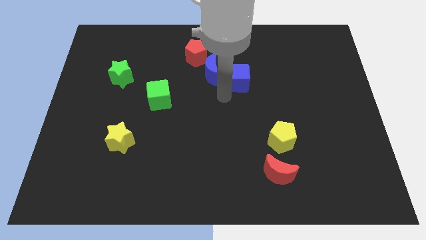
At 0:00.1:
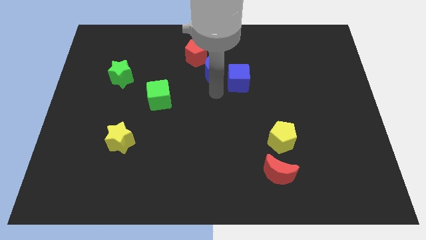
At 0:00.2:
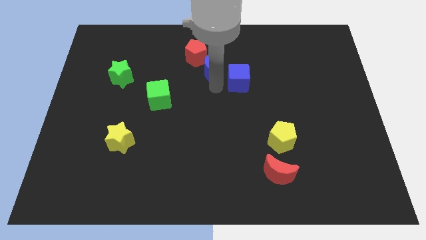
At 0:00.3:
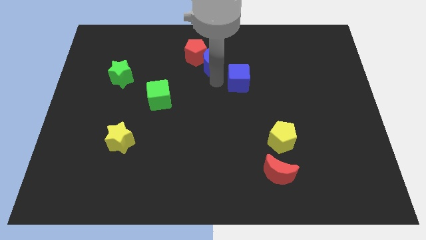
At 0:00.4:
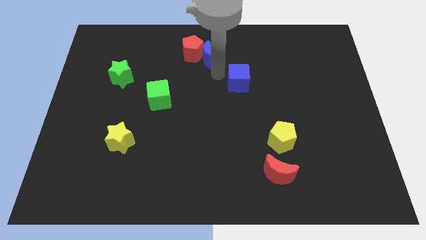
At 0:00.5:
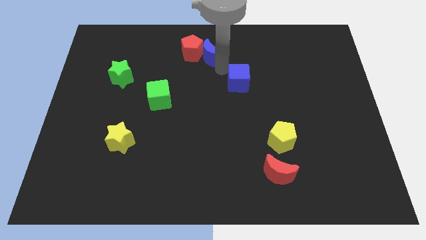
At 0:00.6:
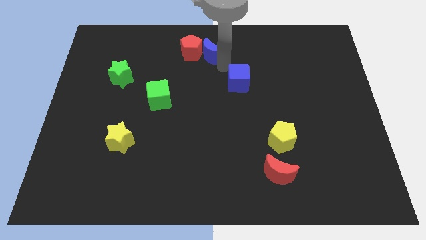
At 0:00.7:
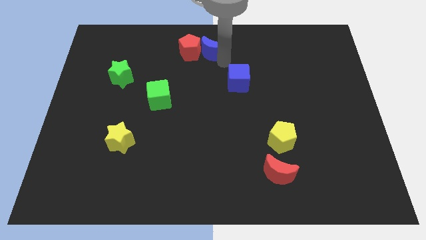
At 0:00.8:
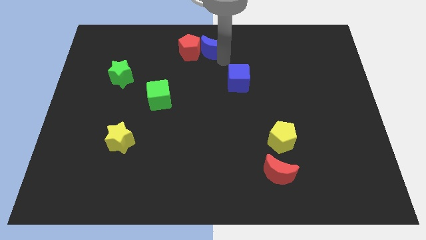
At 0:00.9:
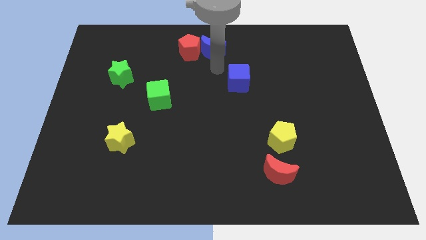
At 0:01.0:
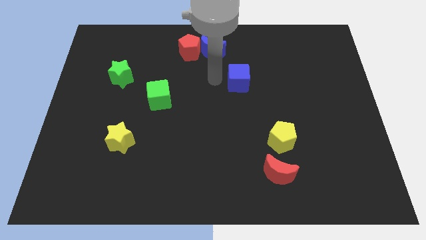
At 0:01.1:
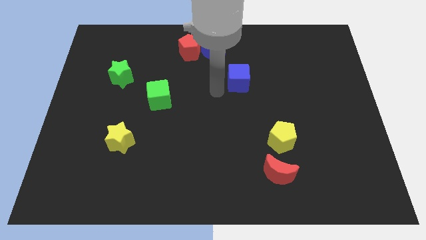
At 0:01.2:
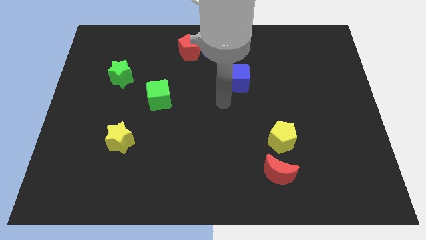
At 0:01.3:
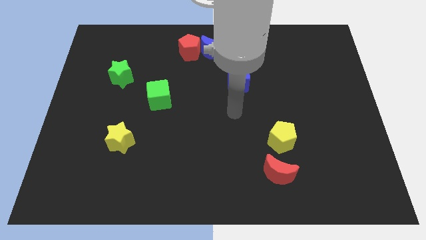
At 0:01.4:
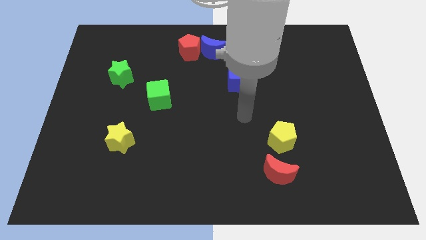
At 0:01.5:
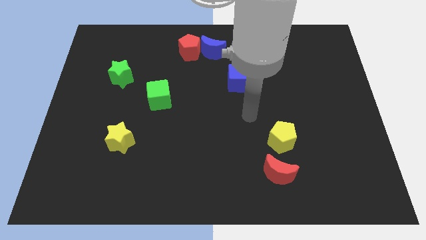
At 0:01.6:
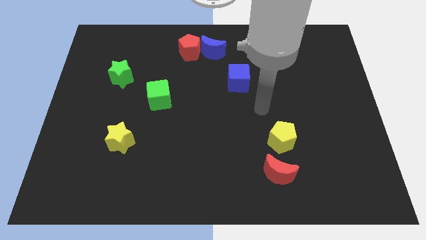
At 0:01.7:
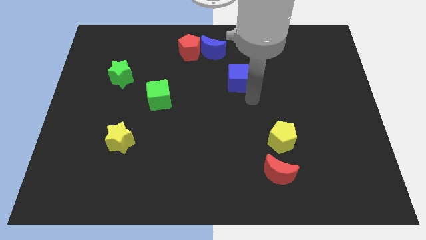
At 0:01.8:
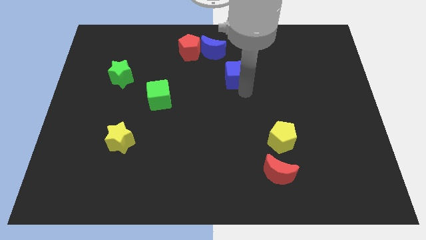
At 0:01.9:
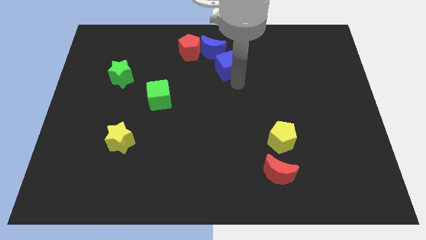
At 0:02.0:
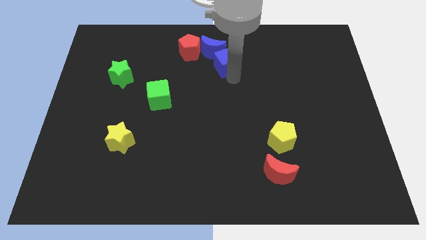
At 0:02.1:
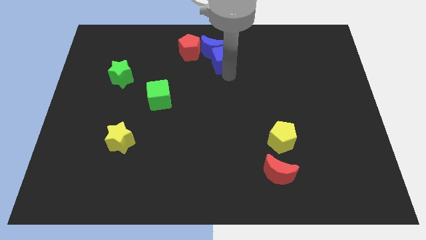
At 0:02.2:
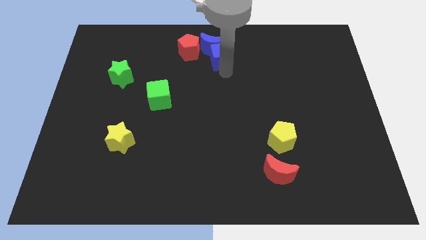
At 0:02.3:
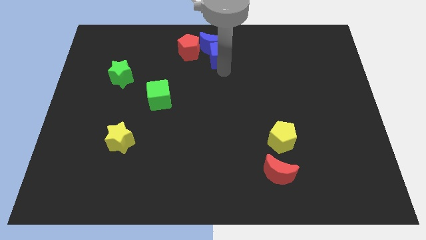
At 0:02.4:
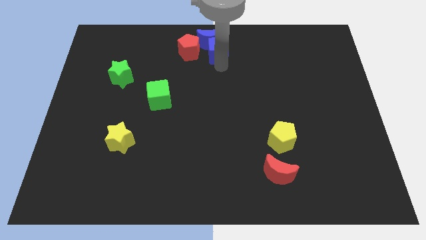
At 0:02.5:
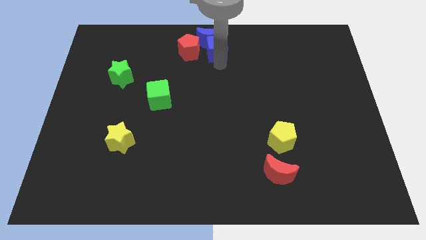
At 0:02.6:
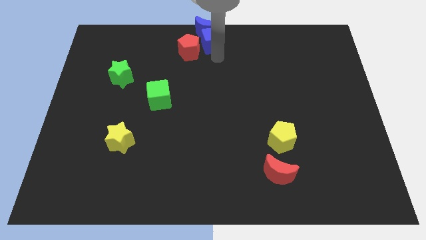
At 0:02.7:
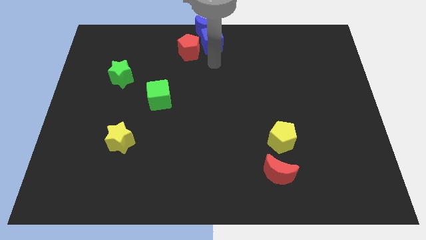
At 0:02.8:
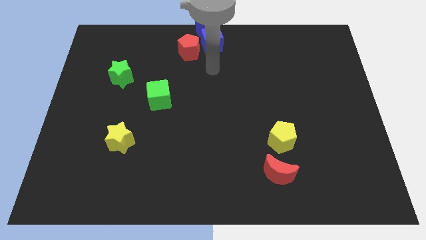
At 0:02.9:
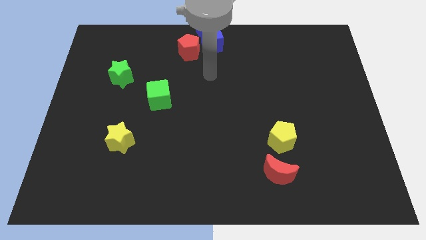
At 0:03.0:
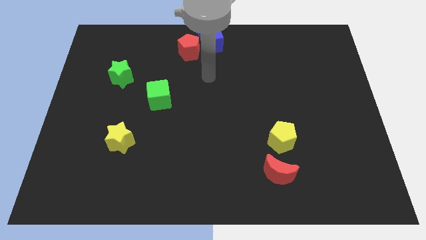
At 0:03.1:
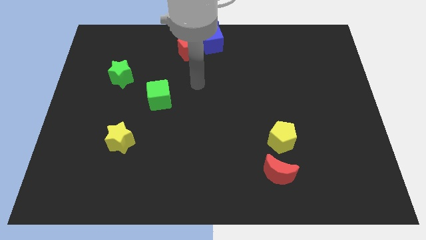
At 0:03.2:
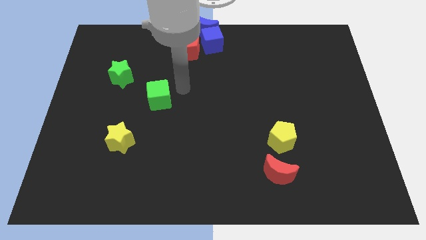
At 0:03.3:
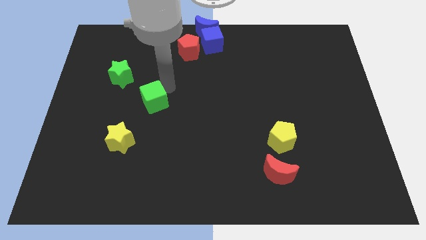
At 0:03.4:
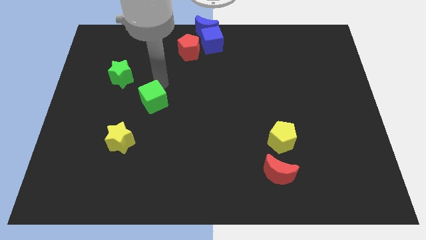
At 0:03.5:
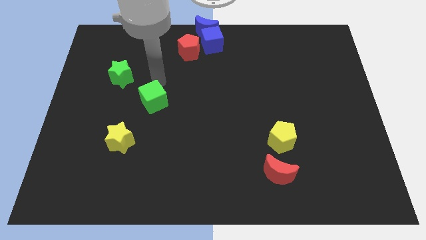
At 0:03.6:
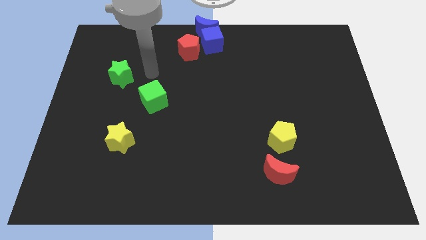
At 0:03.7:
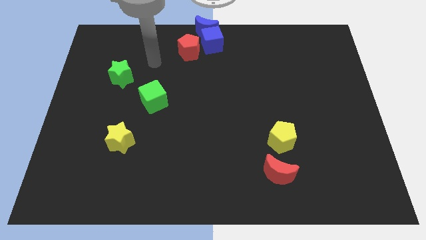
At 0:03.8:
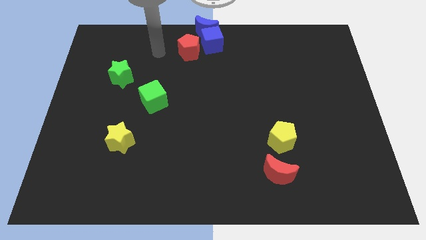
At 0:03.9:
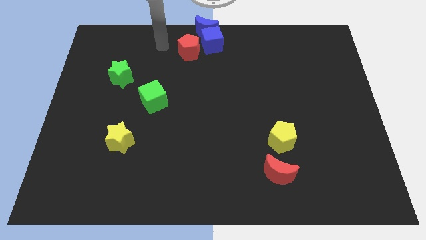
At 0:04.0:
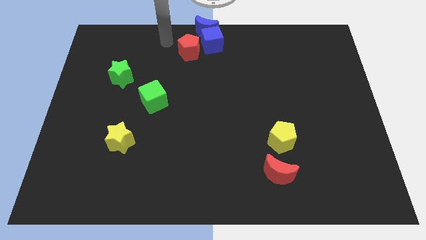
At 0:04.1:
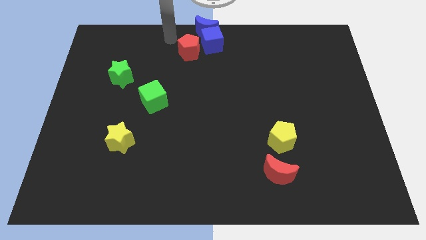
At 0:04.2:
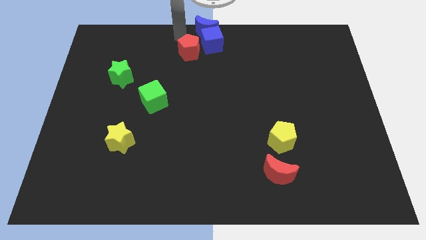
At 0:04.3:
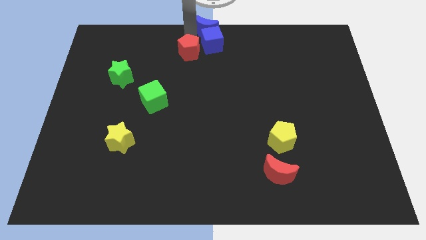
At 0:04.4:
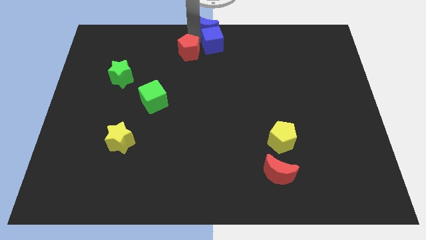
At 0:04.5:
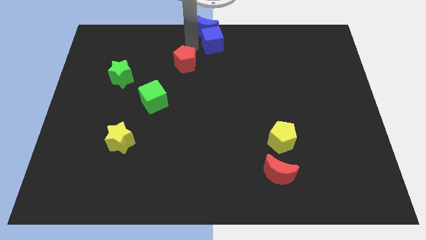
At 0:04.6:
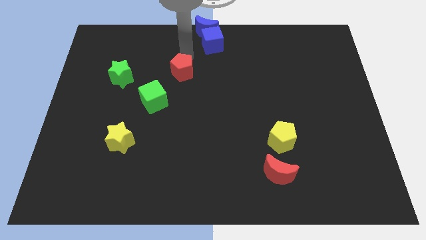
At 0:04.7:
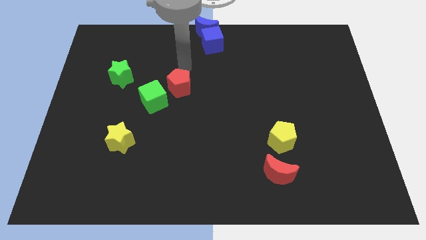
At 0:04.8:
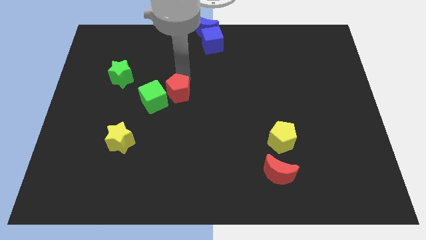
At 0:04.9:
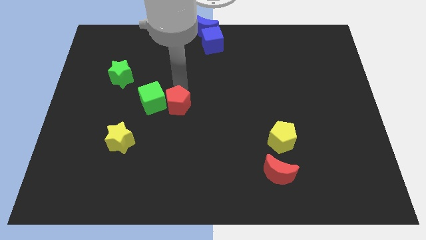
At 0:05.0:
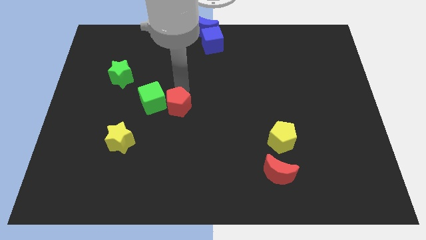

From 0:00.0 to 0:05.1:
put the red pentagon to the right side of the green cube

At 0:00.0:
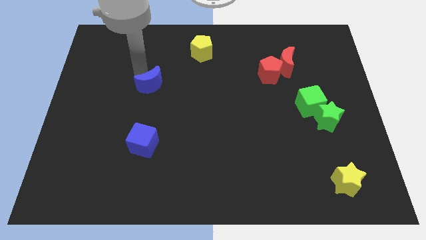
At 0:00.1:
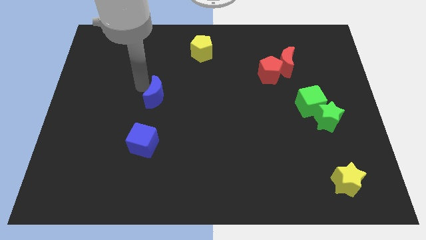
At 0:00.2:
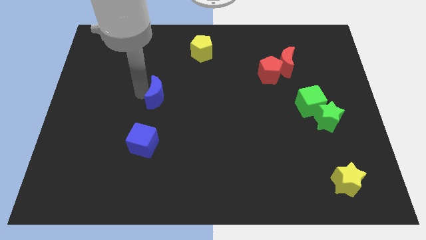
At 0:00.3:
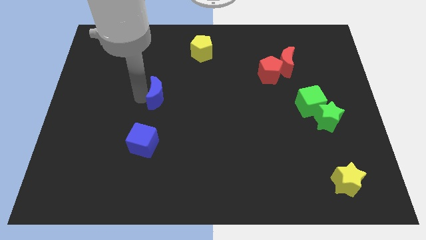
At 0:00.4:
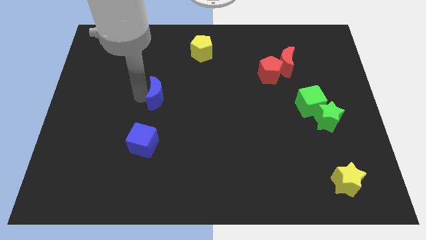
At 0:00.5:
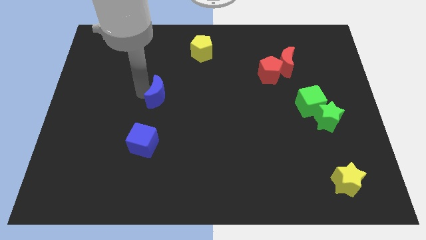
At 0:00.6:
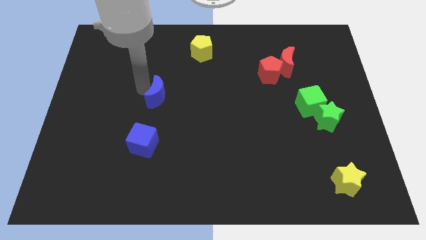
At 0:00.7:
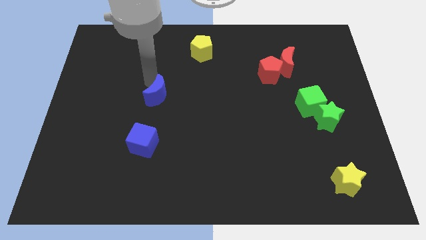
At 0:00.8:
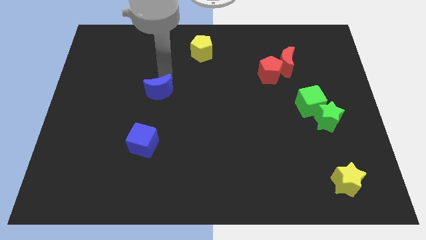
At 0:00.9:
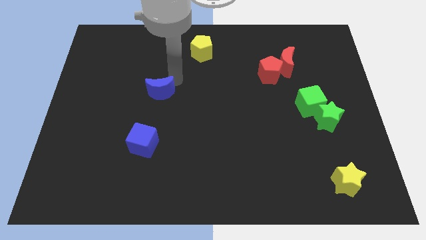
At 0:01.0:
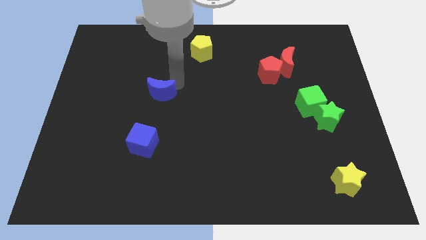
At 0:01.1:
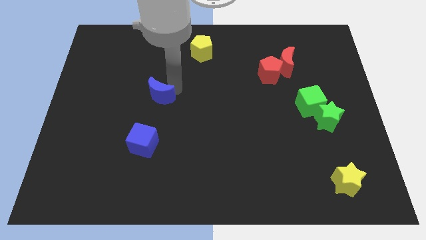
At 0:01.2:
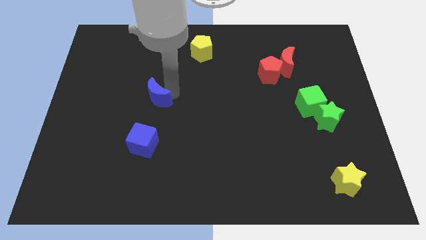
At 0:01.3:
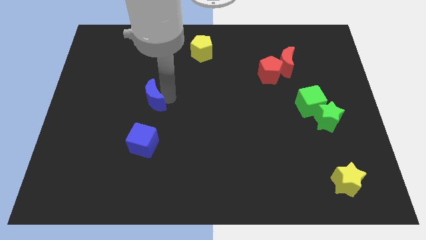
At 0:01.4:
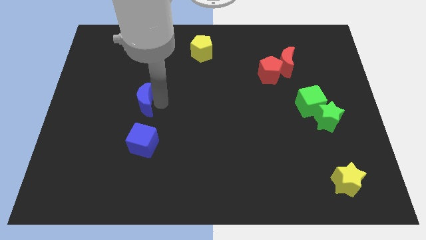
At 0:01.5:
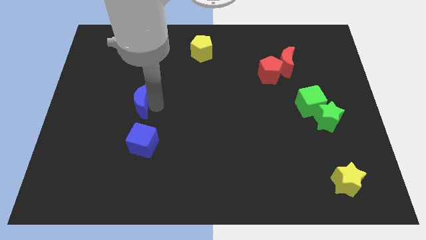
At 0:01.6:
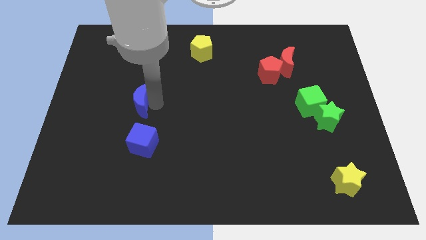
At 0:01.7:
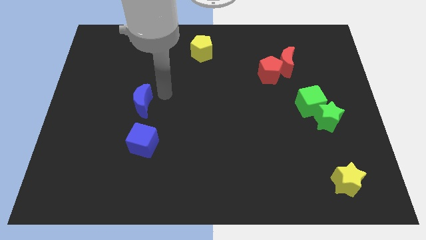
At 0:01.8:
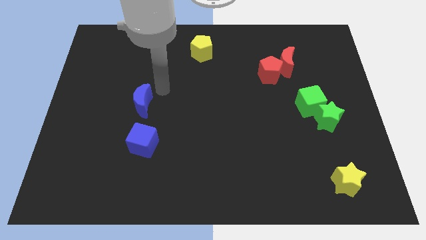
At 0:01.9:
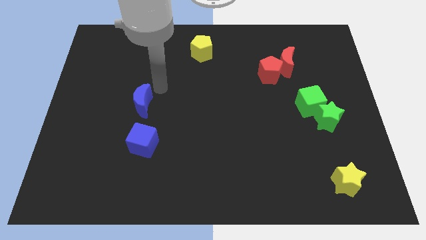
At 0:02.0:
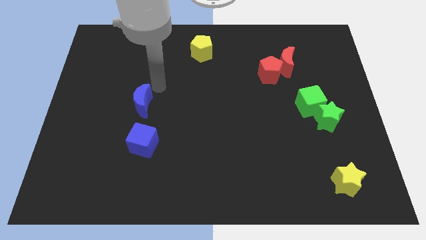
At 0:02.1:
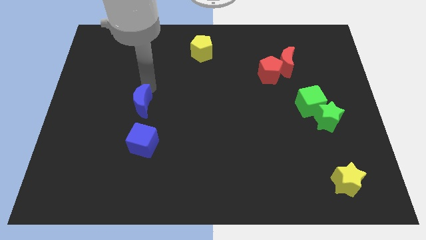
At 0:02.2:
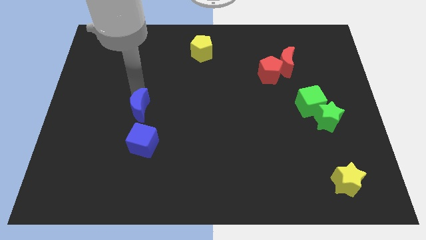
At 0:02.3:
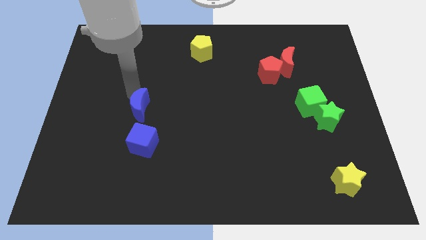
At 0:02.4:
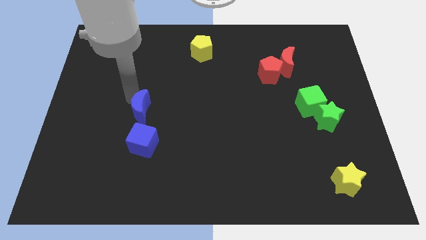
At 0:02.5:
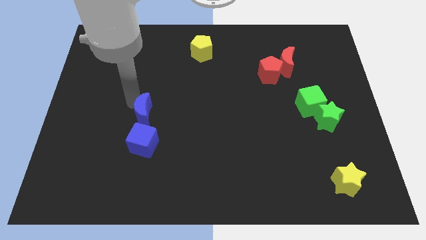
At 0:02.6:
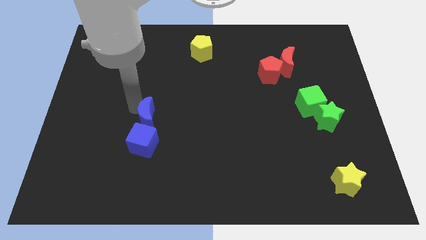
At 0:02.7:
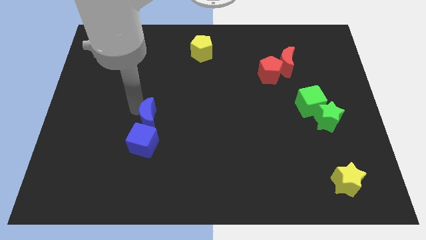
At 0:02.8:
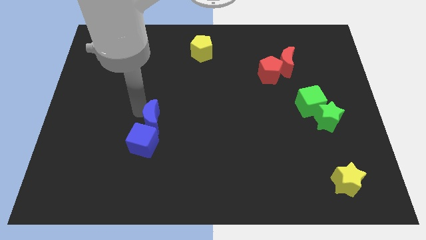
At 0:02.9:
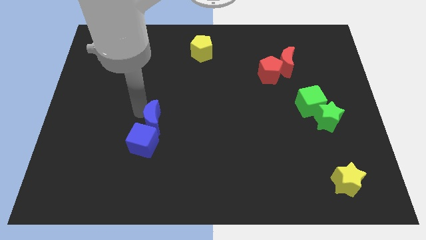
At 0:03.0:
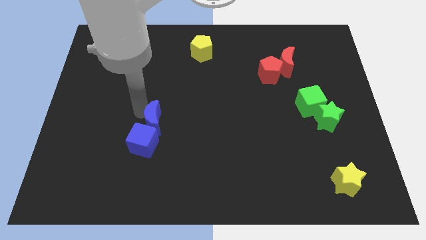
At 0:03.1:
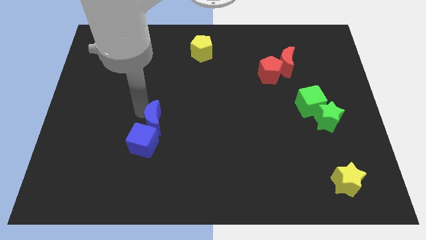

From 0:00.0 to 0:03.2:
place the blue moon above the blue cube

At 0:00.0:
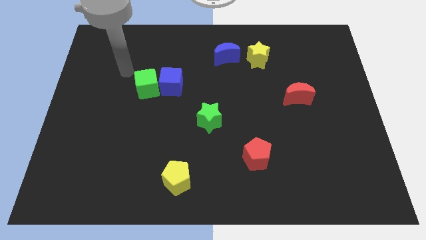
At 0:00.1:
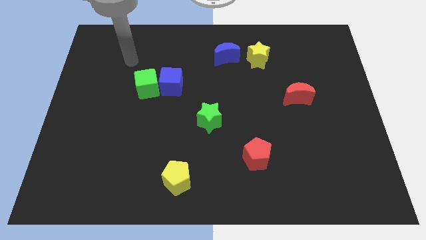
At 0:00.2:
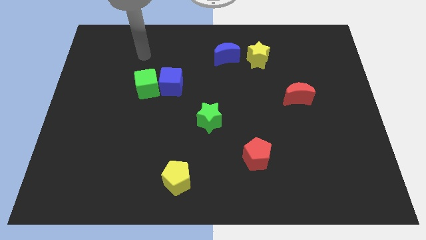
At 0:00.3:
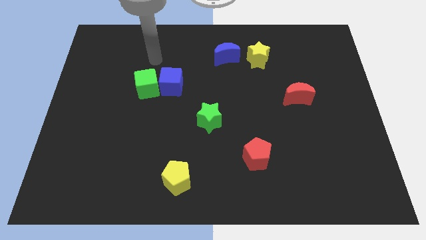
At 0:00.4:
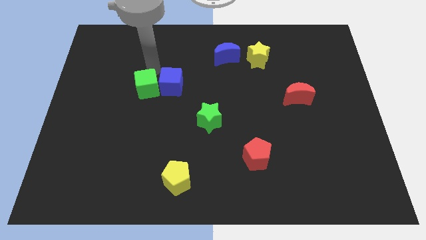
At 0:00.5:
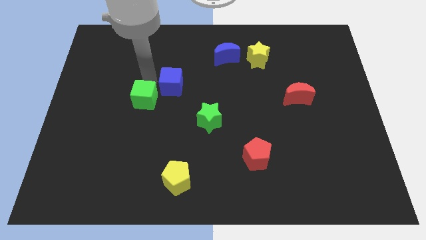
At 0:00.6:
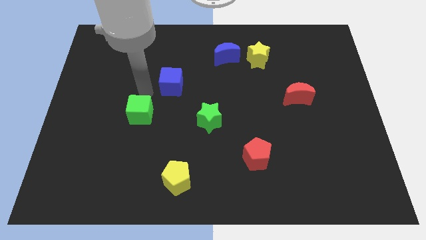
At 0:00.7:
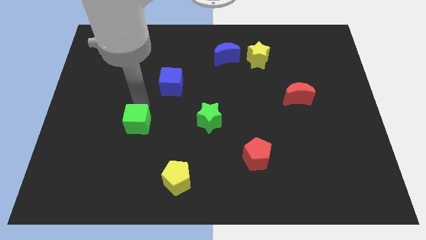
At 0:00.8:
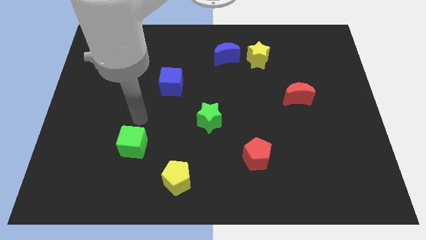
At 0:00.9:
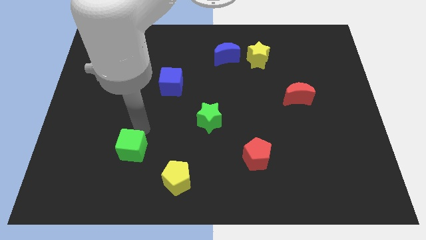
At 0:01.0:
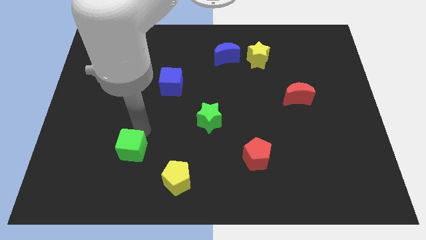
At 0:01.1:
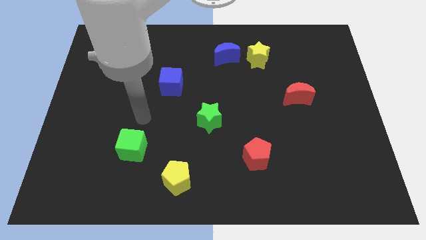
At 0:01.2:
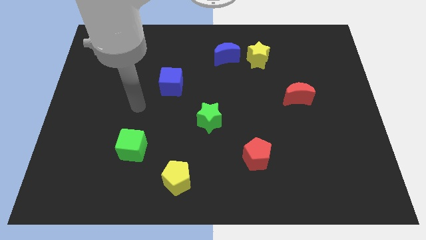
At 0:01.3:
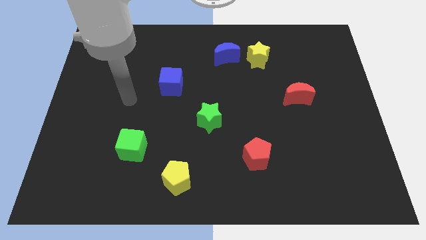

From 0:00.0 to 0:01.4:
separate the green cube from blue cube
